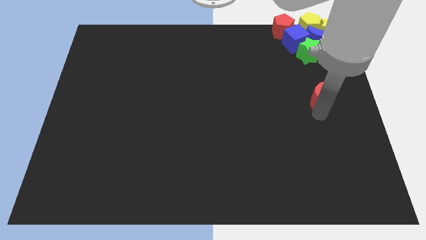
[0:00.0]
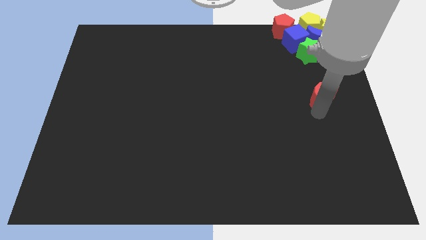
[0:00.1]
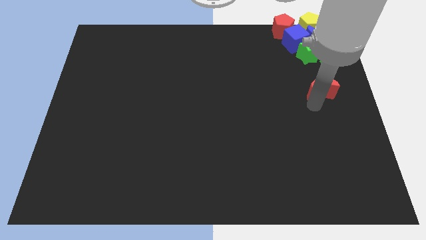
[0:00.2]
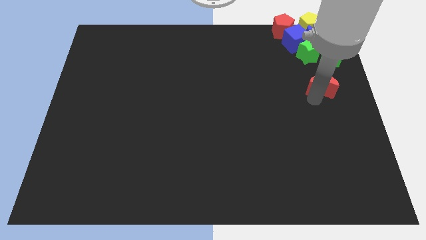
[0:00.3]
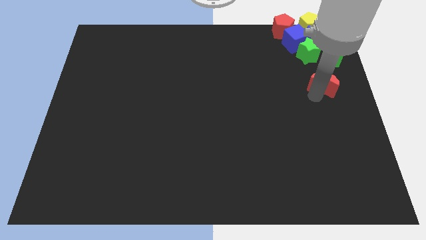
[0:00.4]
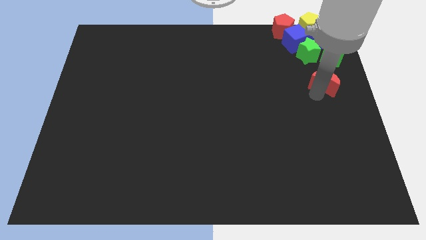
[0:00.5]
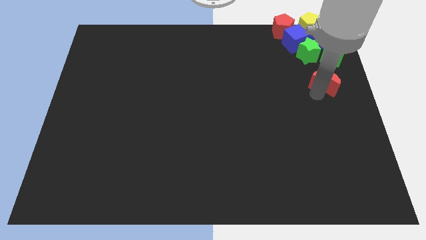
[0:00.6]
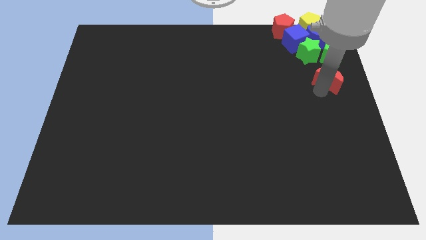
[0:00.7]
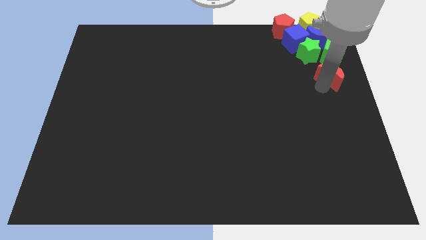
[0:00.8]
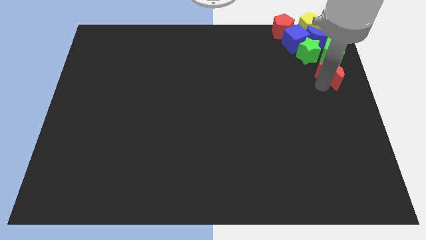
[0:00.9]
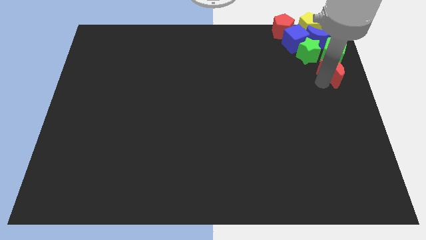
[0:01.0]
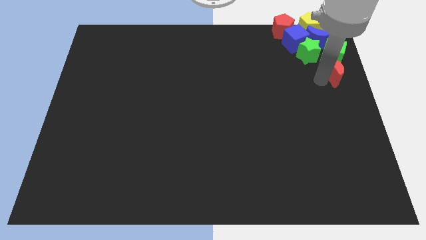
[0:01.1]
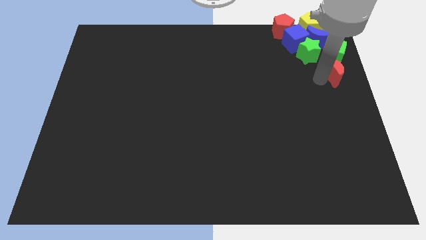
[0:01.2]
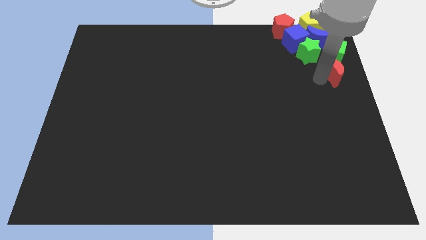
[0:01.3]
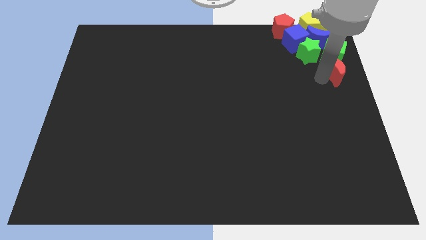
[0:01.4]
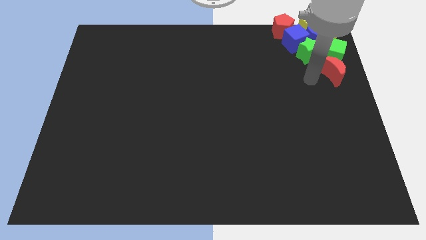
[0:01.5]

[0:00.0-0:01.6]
add the red crescent to the group of all the blocks

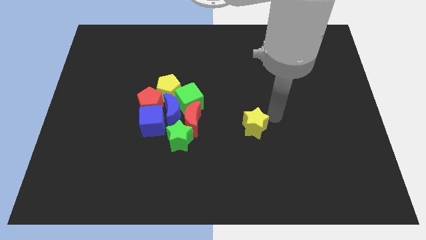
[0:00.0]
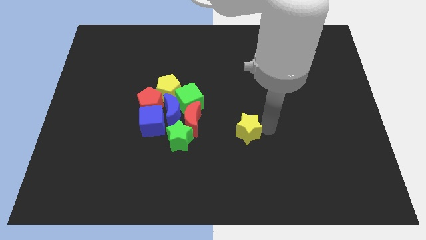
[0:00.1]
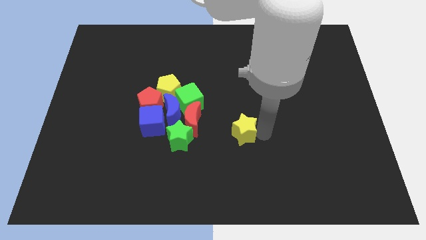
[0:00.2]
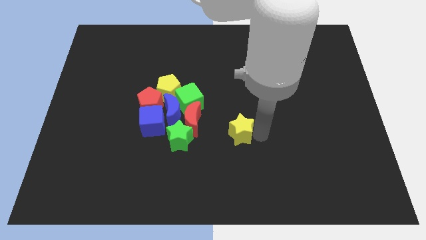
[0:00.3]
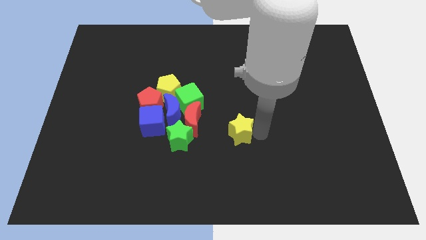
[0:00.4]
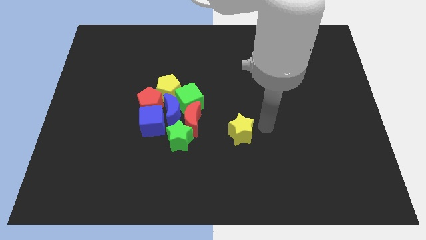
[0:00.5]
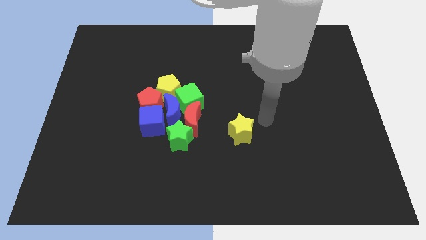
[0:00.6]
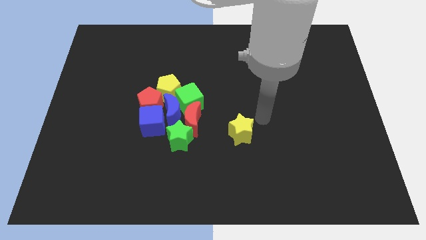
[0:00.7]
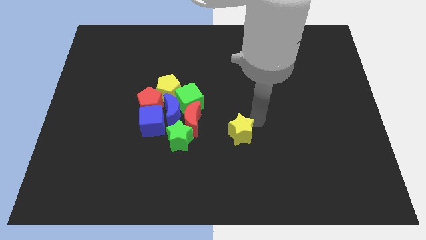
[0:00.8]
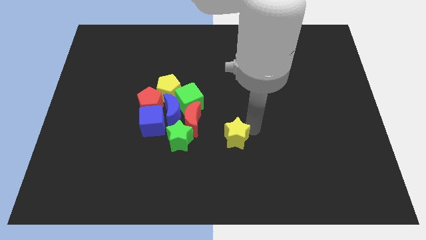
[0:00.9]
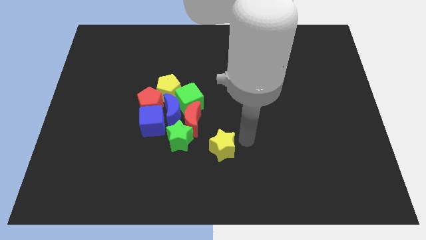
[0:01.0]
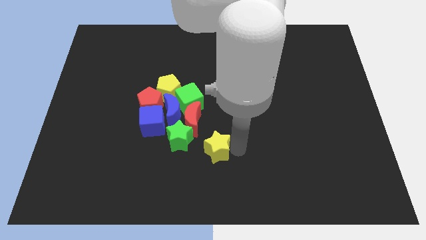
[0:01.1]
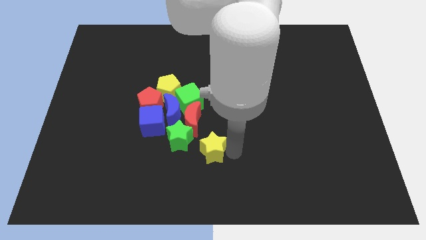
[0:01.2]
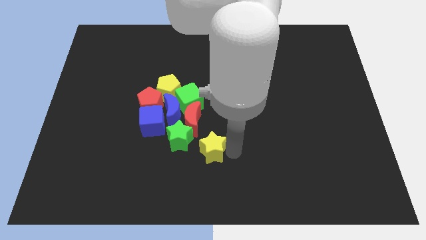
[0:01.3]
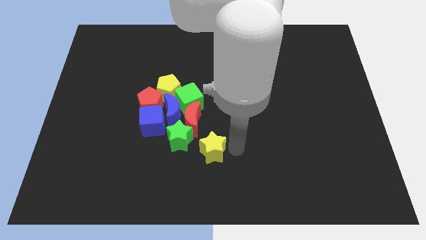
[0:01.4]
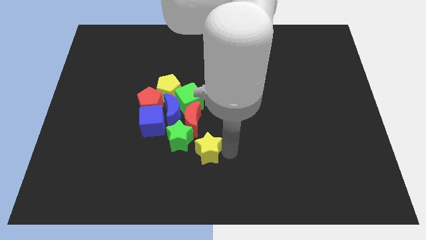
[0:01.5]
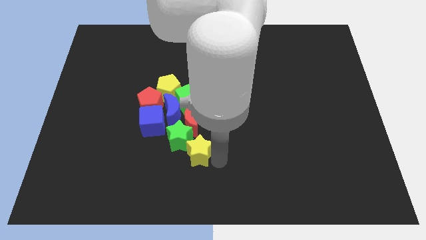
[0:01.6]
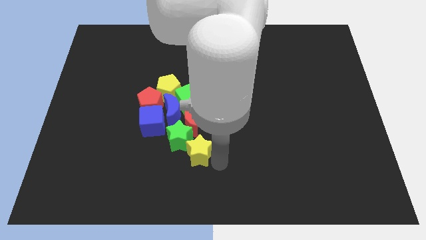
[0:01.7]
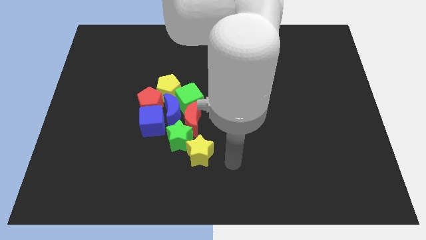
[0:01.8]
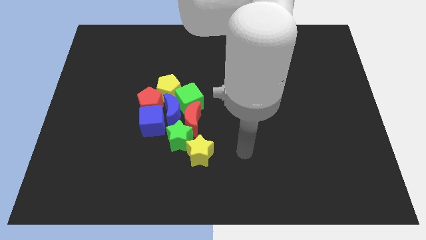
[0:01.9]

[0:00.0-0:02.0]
push the yellow star towards the green star

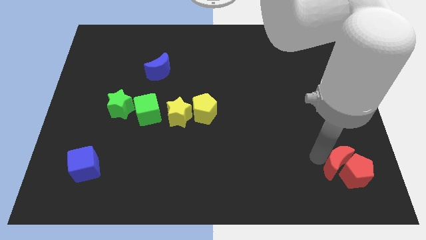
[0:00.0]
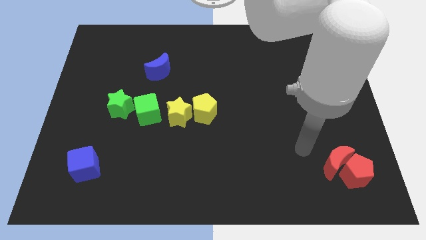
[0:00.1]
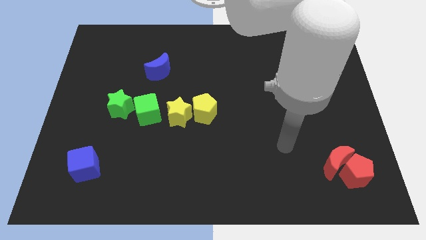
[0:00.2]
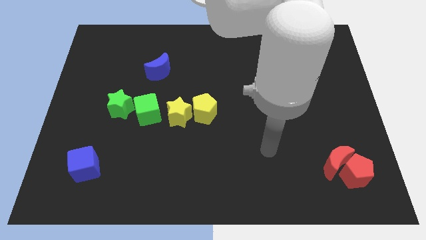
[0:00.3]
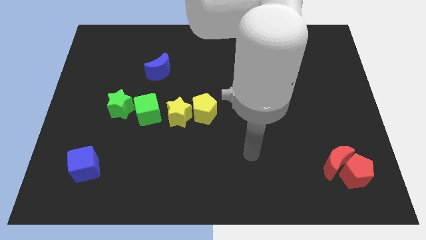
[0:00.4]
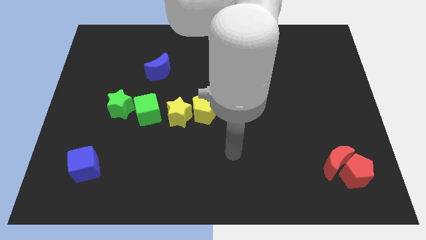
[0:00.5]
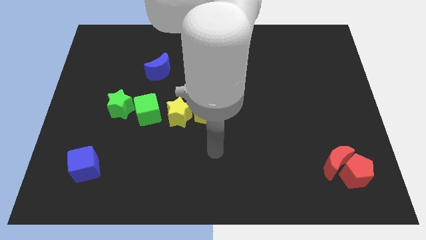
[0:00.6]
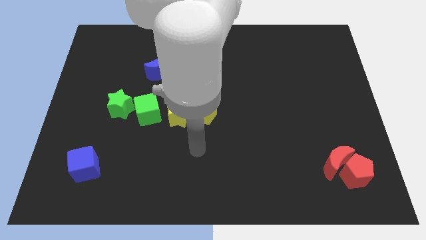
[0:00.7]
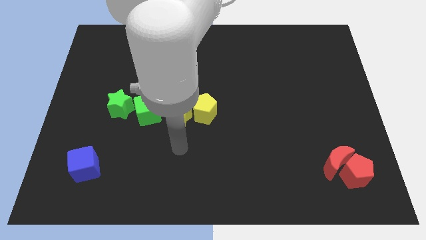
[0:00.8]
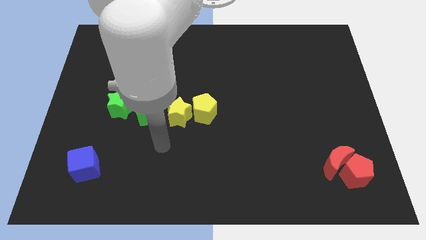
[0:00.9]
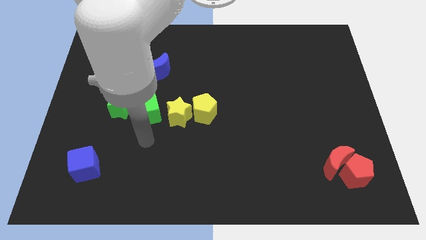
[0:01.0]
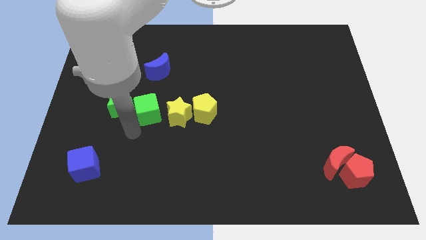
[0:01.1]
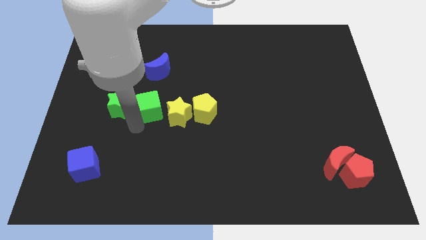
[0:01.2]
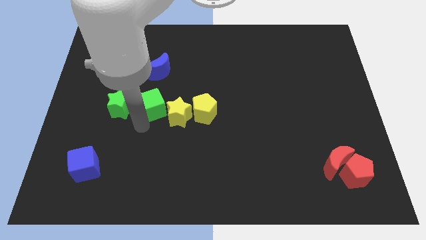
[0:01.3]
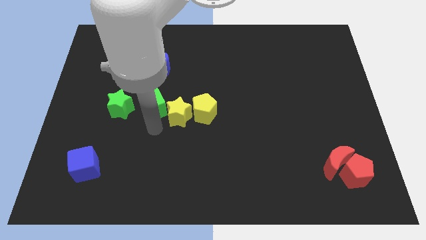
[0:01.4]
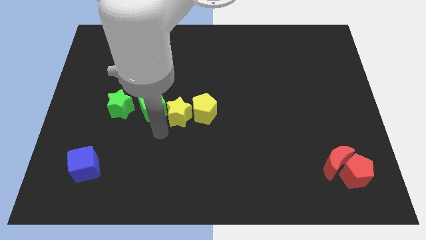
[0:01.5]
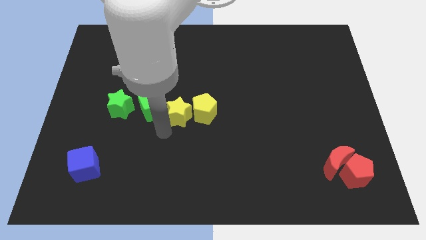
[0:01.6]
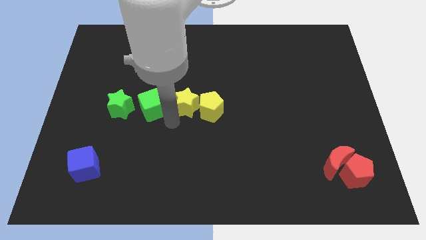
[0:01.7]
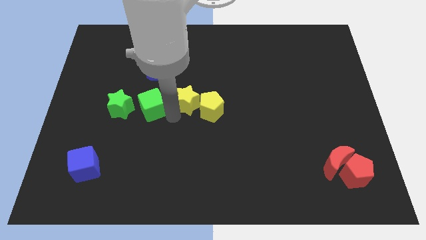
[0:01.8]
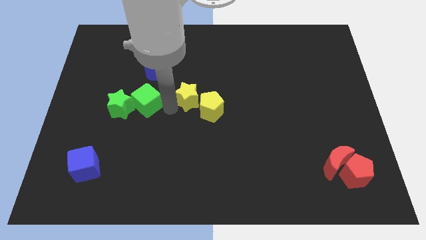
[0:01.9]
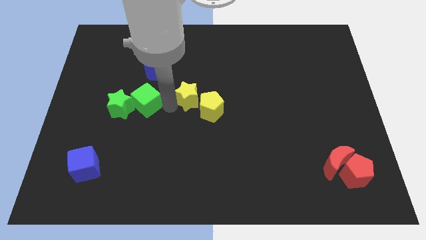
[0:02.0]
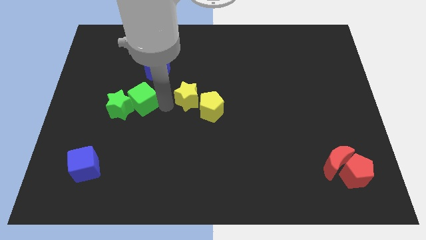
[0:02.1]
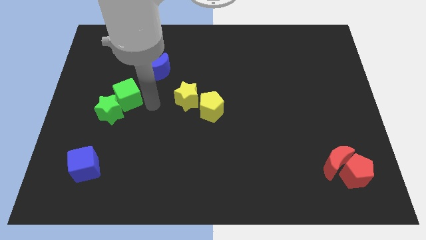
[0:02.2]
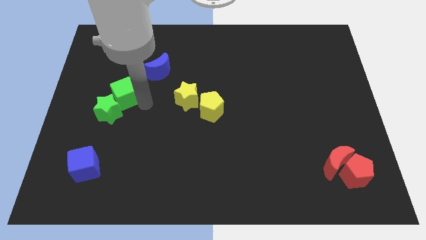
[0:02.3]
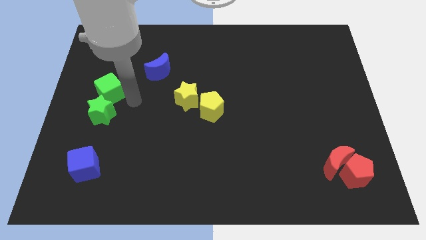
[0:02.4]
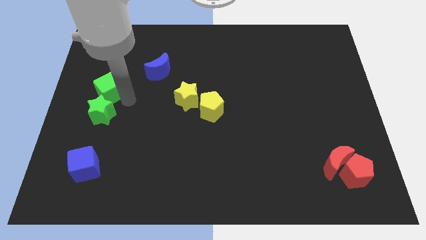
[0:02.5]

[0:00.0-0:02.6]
push the green cube to the top of the green star

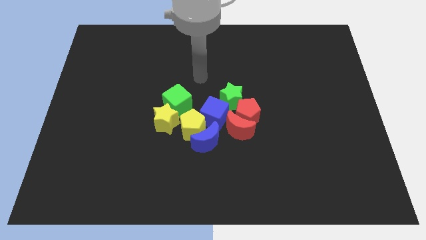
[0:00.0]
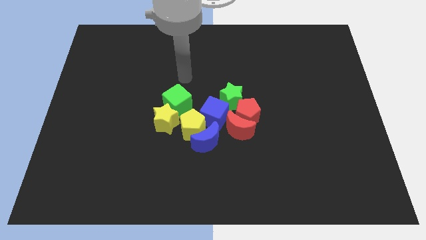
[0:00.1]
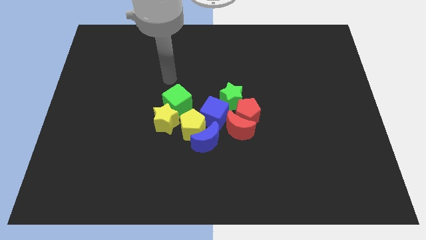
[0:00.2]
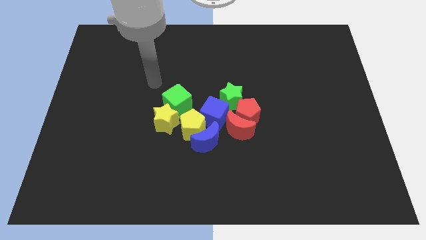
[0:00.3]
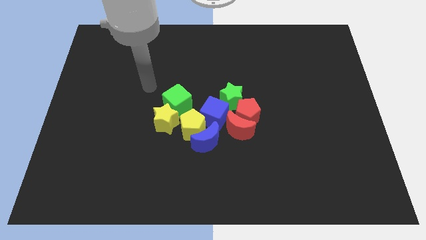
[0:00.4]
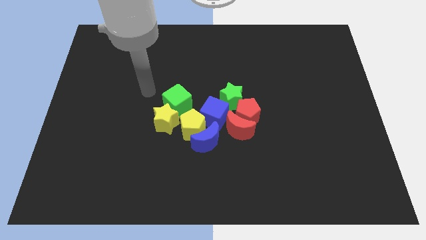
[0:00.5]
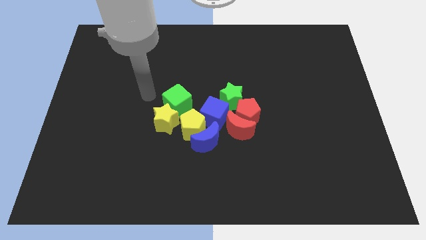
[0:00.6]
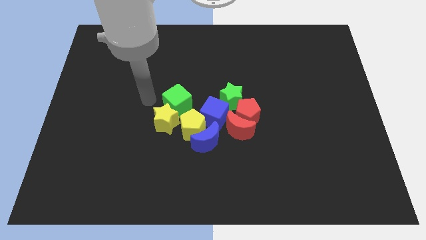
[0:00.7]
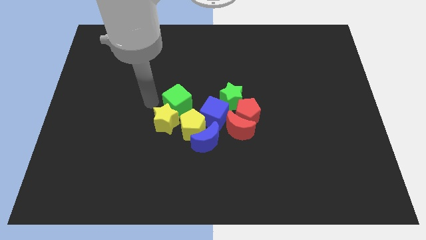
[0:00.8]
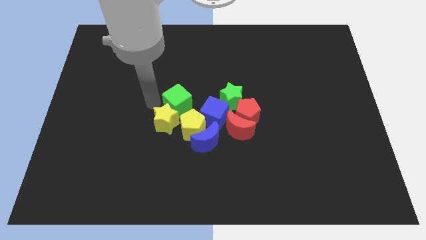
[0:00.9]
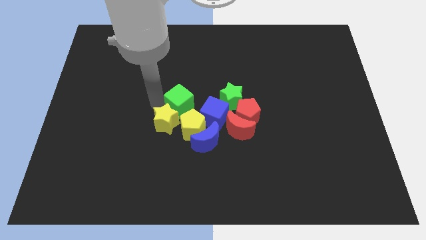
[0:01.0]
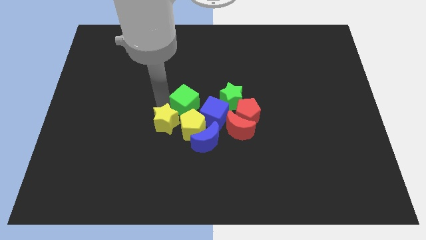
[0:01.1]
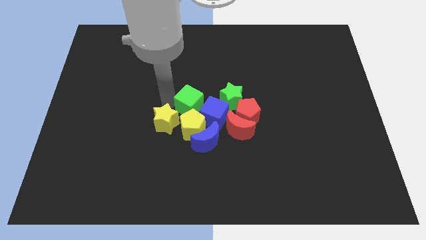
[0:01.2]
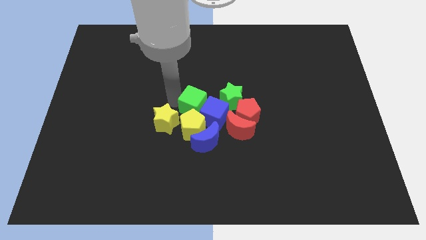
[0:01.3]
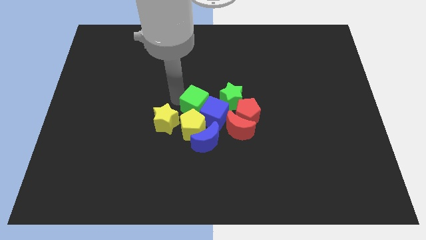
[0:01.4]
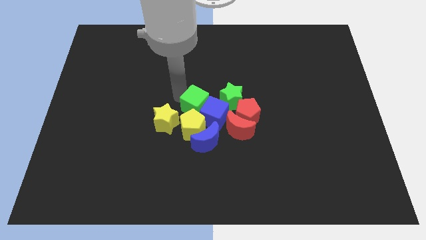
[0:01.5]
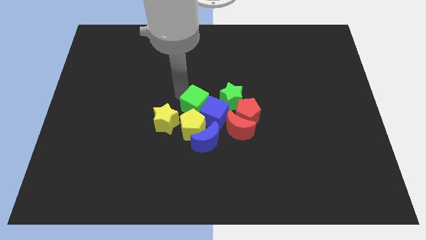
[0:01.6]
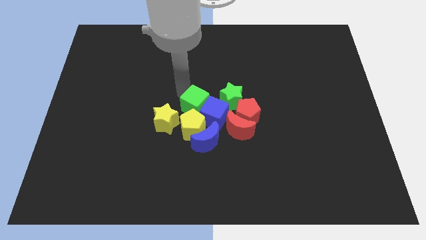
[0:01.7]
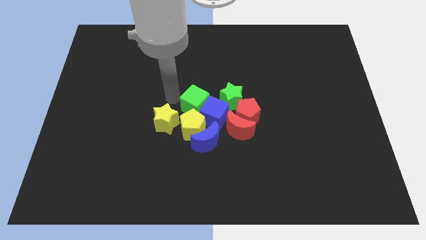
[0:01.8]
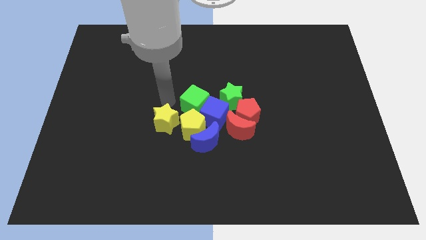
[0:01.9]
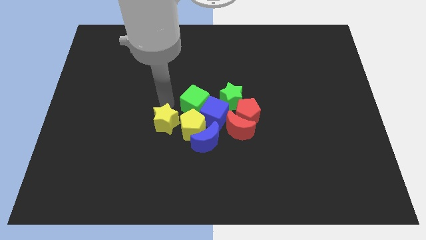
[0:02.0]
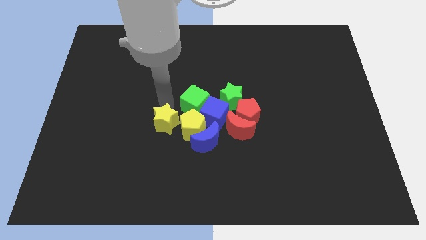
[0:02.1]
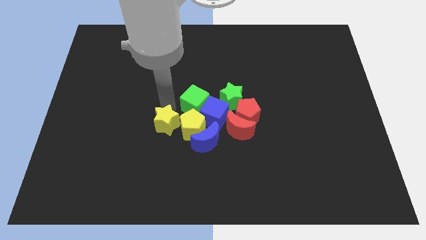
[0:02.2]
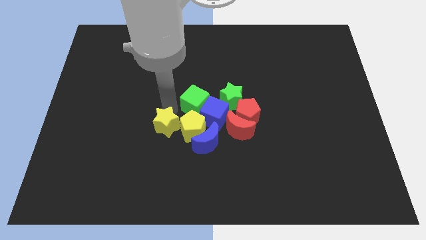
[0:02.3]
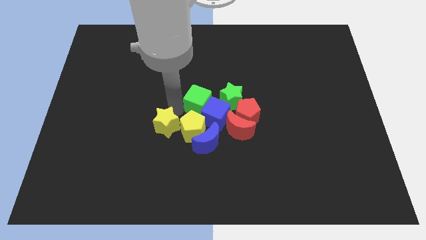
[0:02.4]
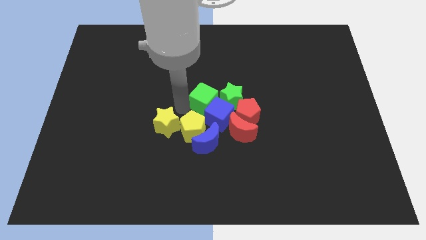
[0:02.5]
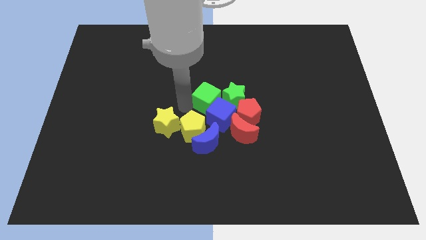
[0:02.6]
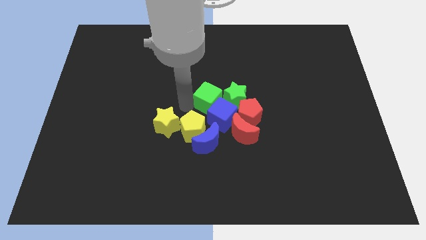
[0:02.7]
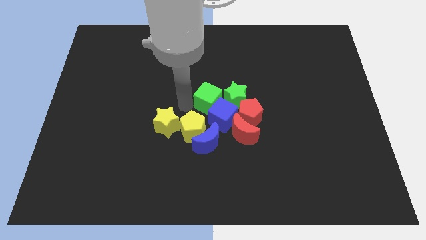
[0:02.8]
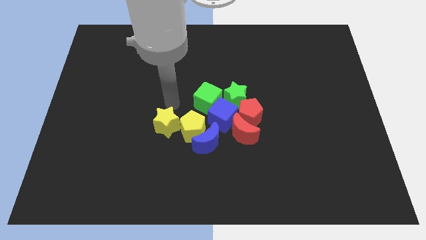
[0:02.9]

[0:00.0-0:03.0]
push the green cube to the left of the green star
